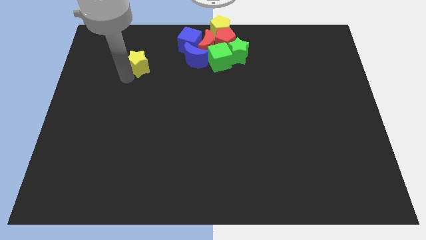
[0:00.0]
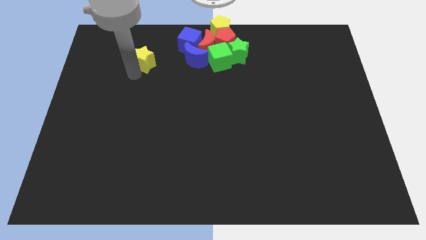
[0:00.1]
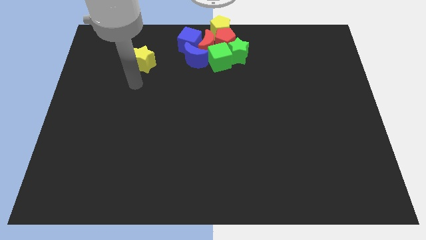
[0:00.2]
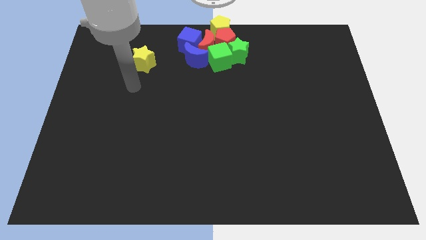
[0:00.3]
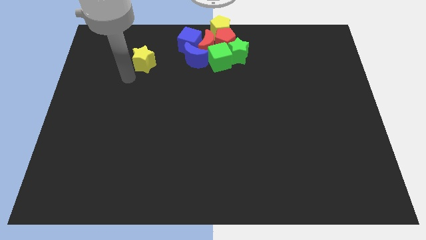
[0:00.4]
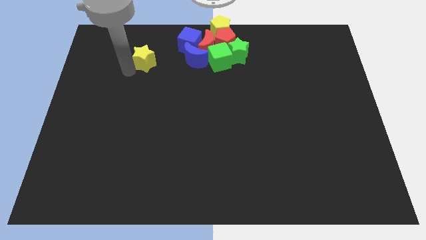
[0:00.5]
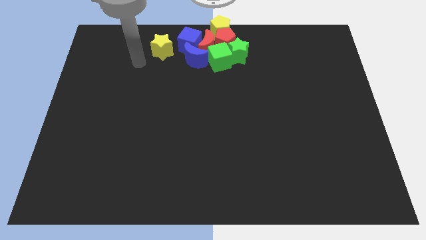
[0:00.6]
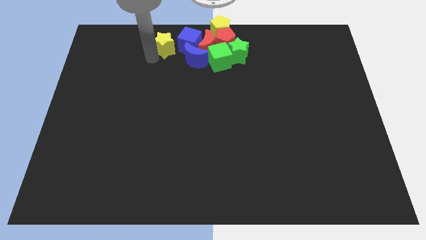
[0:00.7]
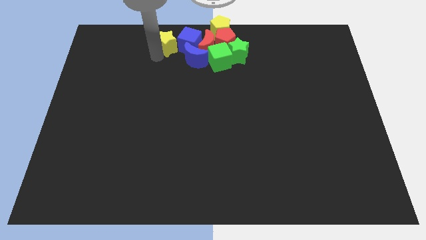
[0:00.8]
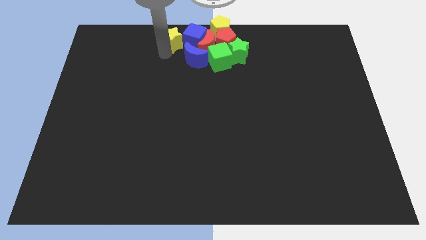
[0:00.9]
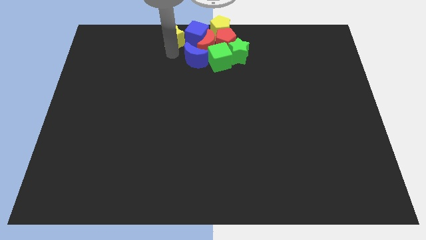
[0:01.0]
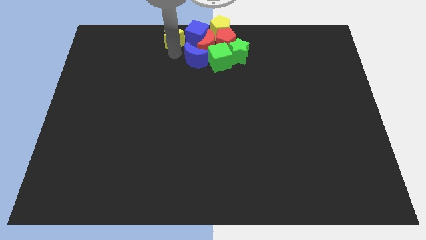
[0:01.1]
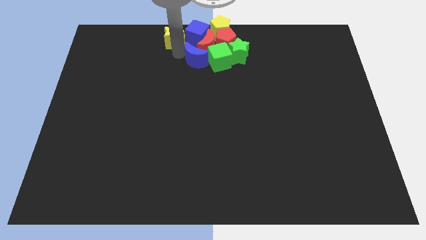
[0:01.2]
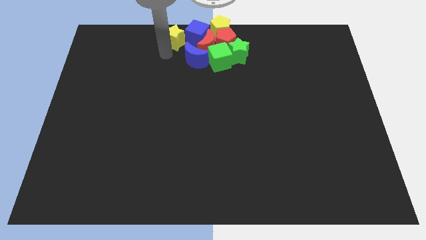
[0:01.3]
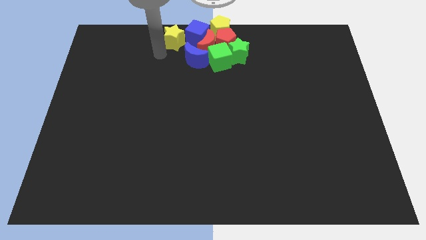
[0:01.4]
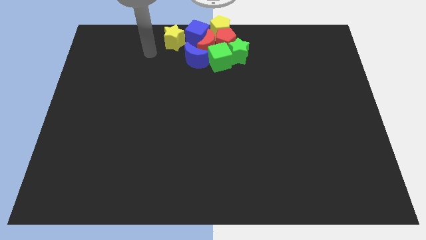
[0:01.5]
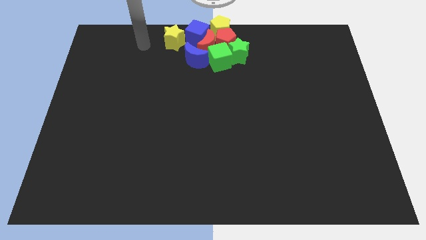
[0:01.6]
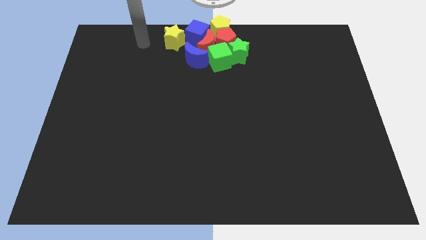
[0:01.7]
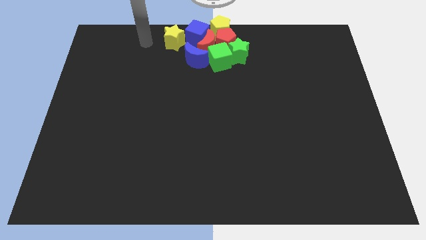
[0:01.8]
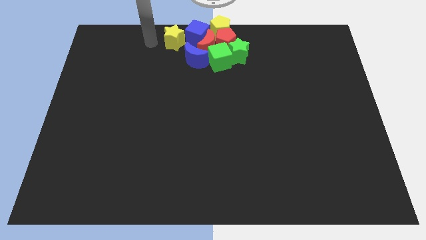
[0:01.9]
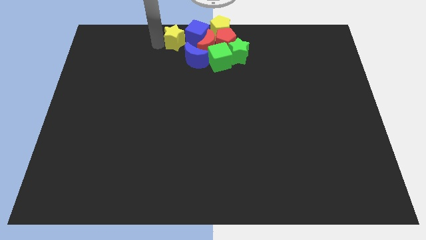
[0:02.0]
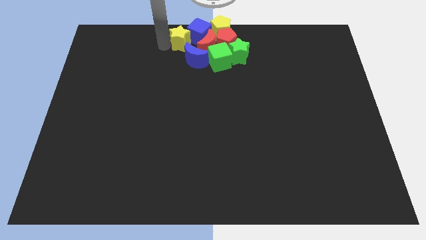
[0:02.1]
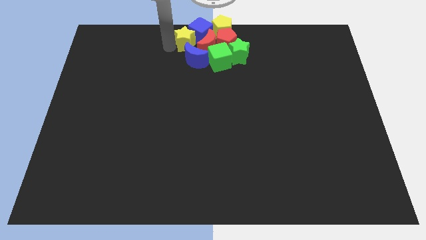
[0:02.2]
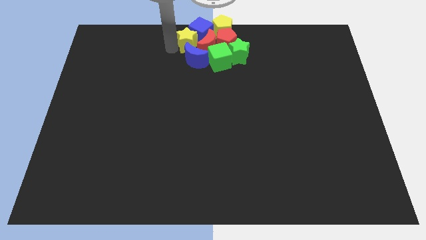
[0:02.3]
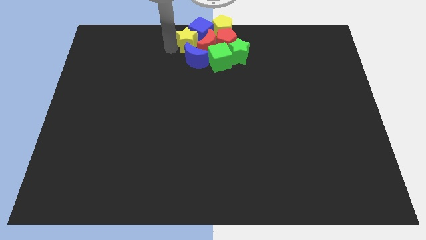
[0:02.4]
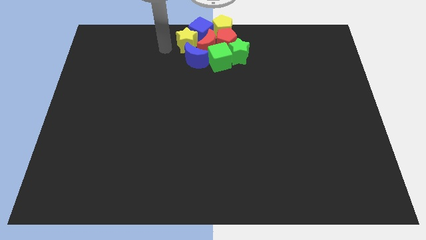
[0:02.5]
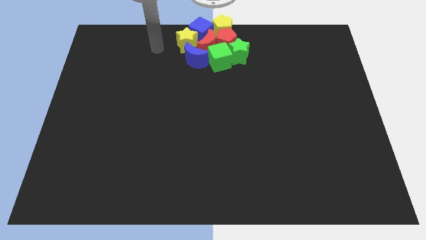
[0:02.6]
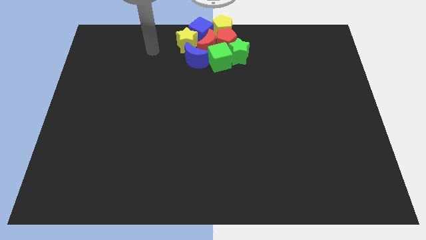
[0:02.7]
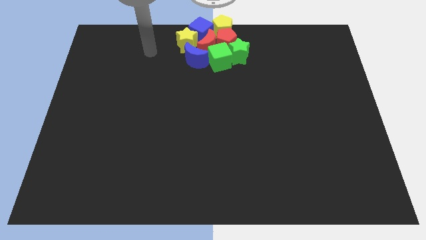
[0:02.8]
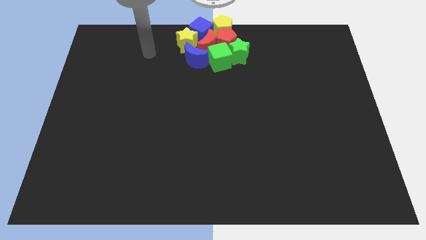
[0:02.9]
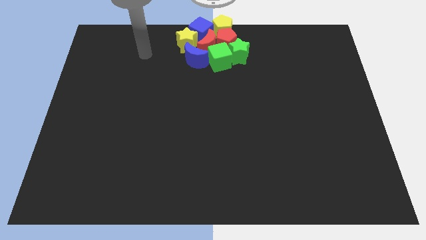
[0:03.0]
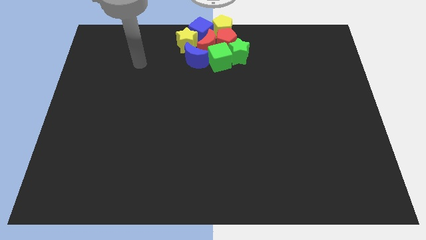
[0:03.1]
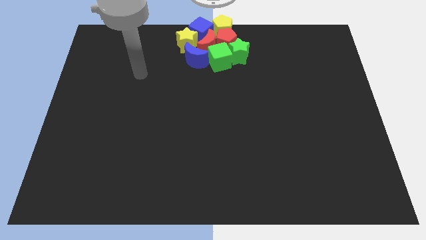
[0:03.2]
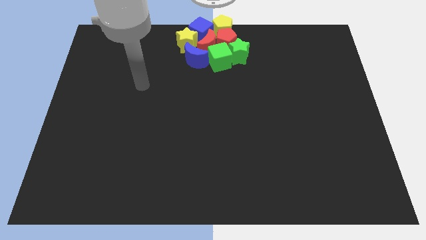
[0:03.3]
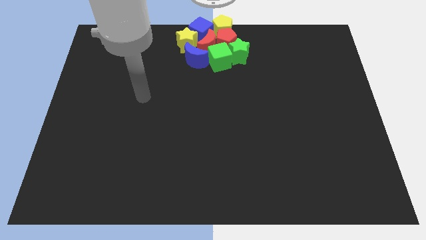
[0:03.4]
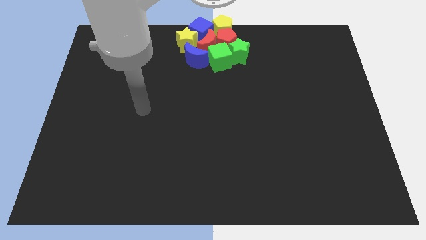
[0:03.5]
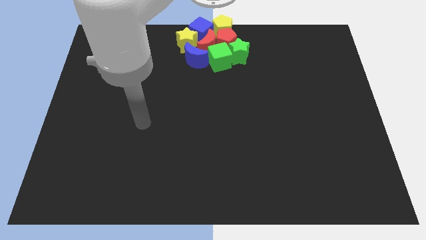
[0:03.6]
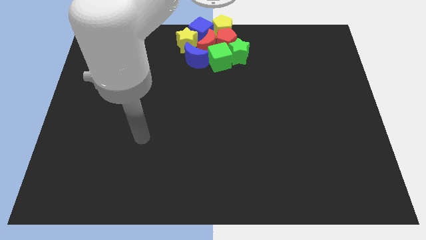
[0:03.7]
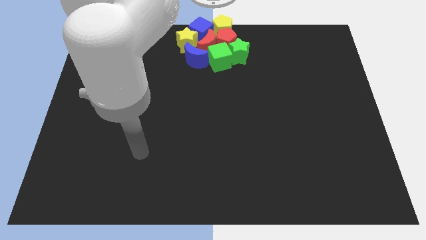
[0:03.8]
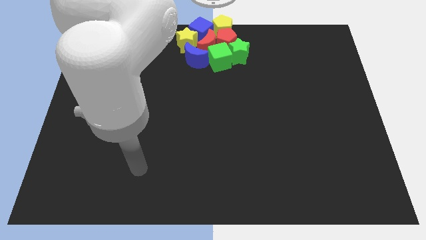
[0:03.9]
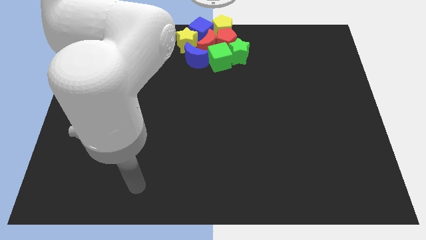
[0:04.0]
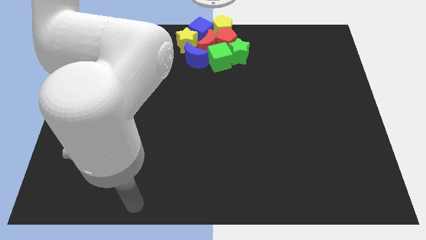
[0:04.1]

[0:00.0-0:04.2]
move the yellow star into the group of blocks

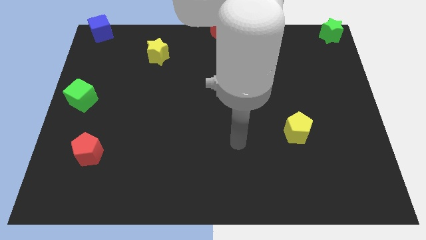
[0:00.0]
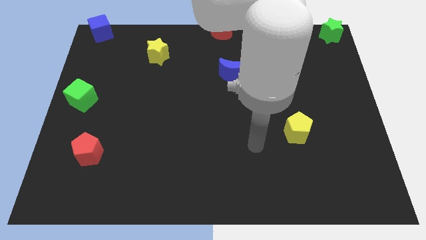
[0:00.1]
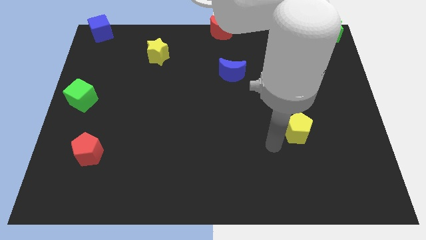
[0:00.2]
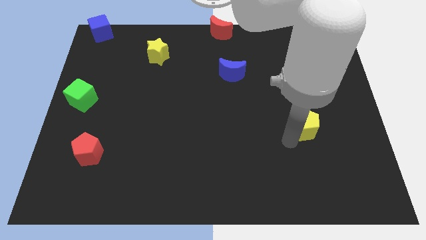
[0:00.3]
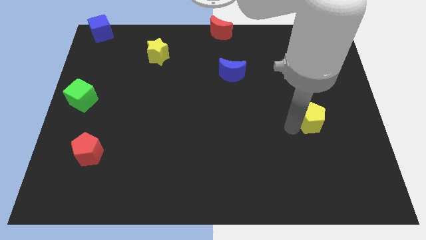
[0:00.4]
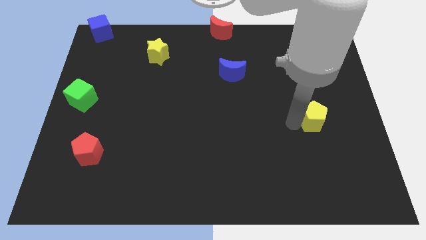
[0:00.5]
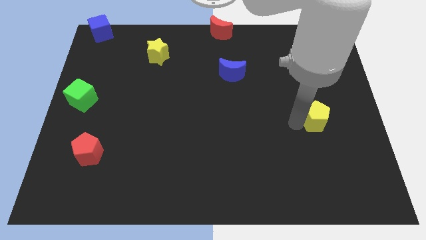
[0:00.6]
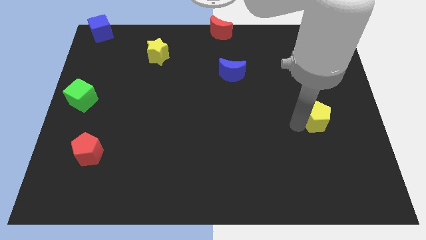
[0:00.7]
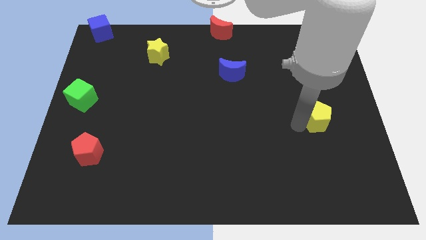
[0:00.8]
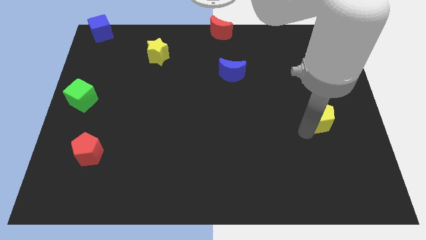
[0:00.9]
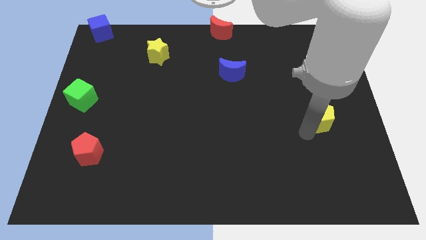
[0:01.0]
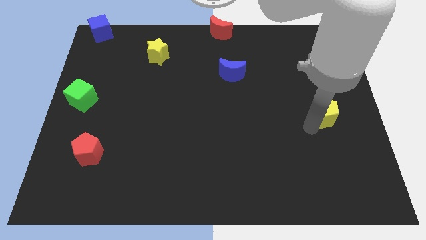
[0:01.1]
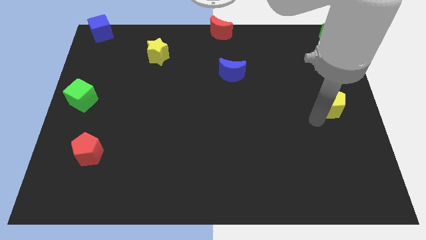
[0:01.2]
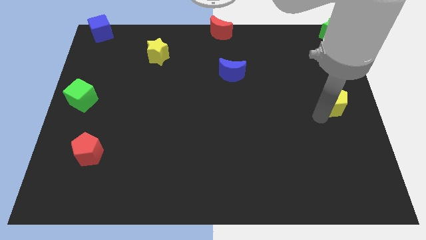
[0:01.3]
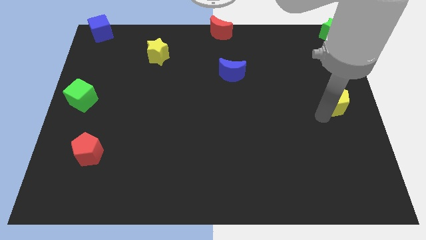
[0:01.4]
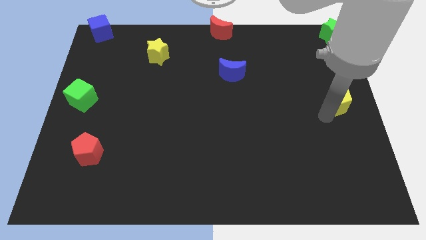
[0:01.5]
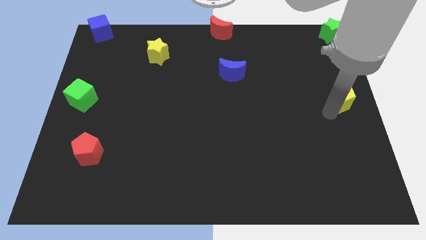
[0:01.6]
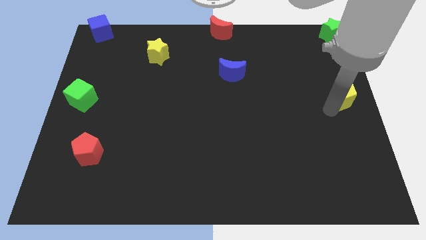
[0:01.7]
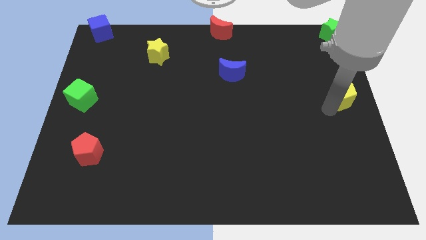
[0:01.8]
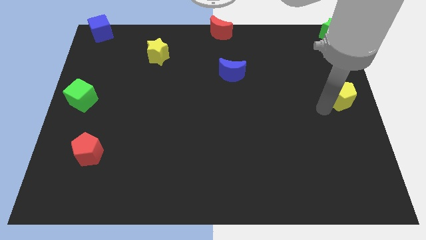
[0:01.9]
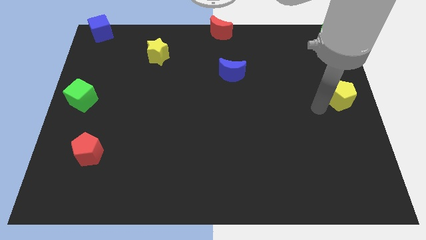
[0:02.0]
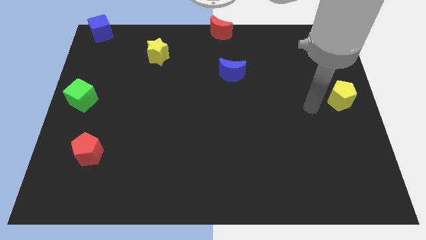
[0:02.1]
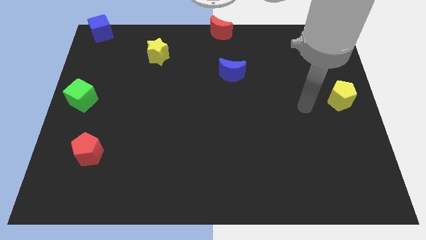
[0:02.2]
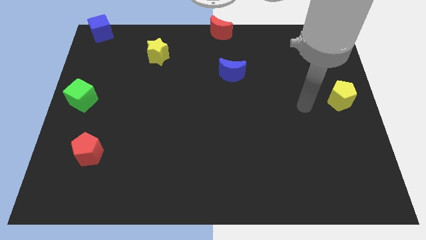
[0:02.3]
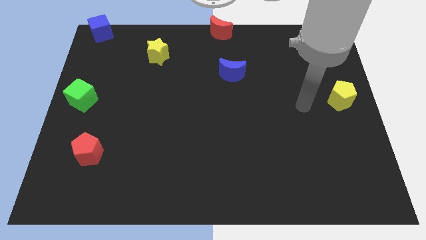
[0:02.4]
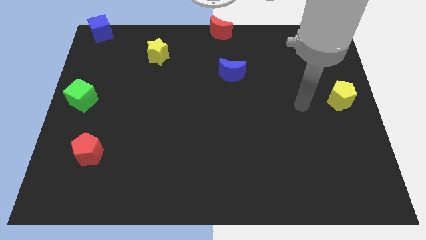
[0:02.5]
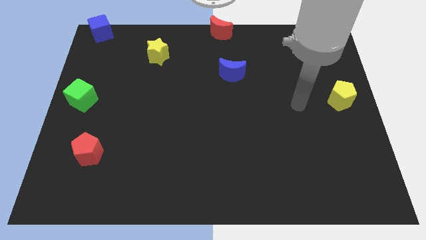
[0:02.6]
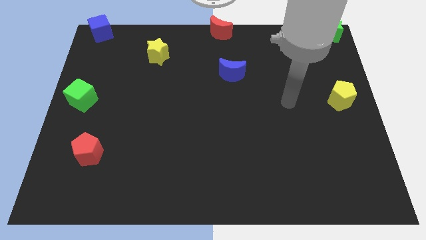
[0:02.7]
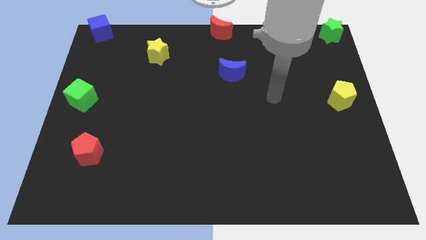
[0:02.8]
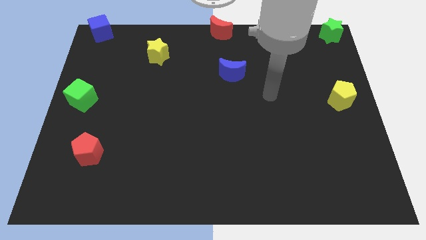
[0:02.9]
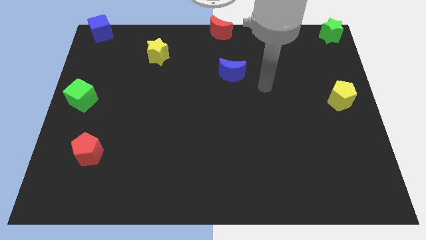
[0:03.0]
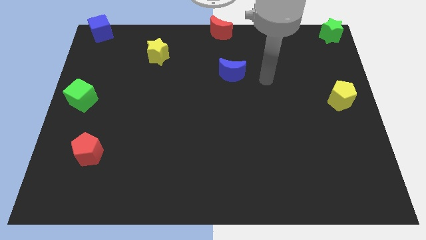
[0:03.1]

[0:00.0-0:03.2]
move the yellow pentagon to the right center of the board

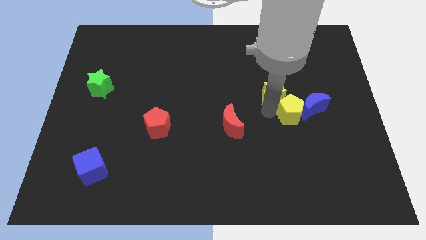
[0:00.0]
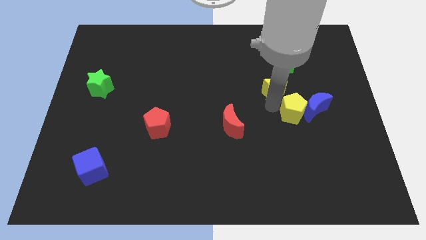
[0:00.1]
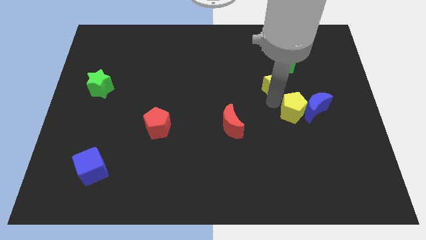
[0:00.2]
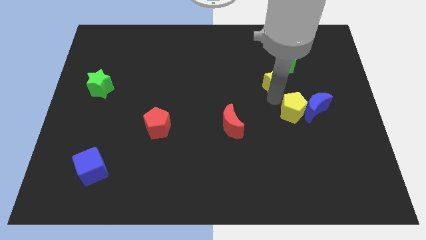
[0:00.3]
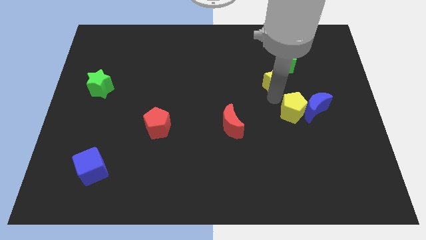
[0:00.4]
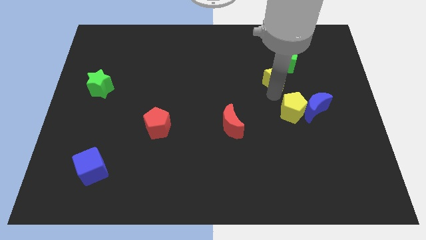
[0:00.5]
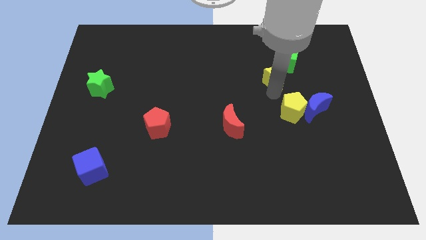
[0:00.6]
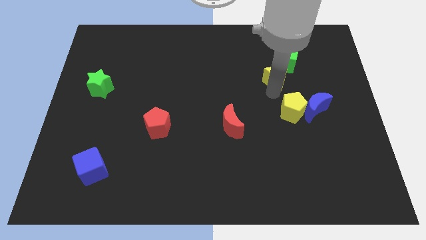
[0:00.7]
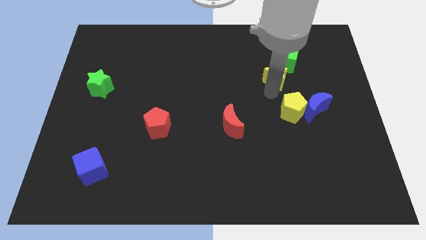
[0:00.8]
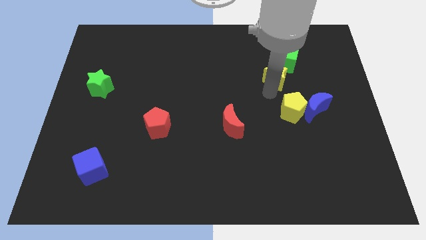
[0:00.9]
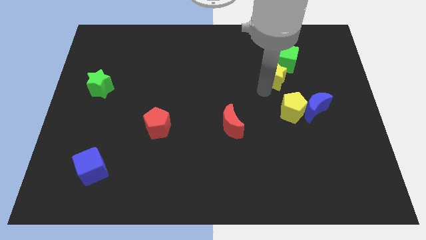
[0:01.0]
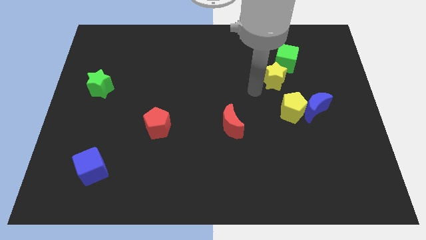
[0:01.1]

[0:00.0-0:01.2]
separate yellow star from the yellow pentagon

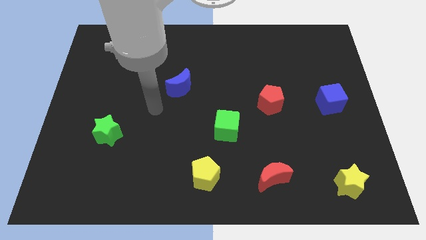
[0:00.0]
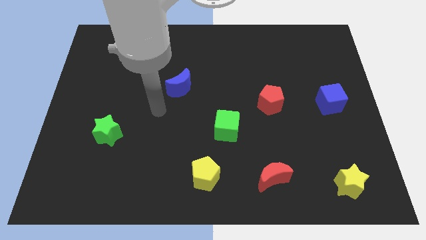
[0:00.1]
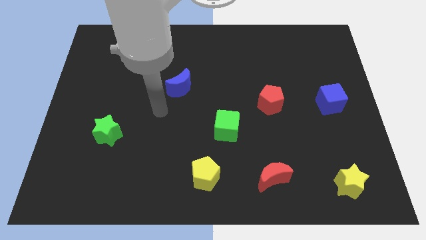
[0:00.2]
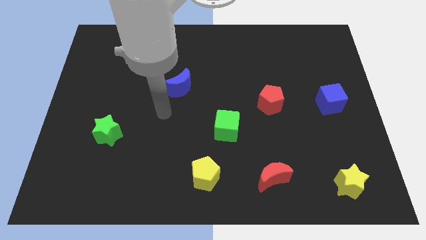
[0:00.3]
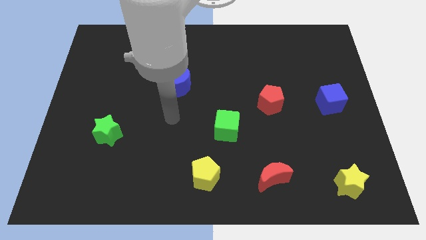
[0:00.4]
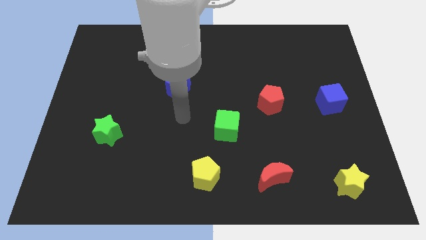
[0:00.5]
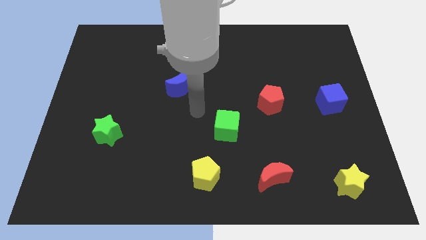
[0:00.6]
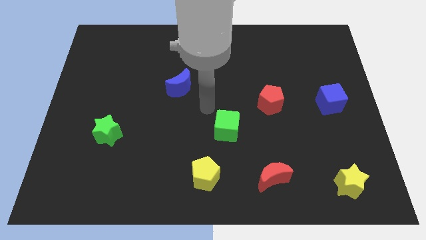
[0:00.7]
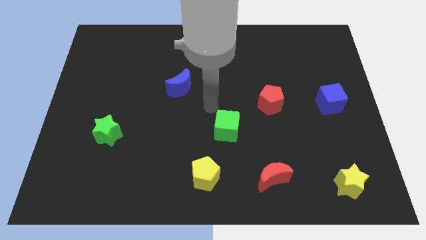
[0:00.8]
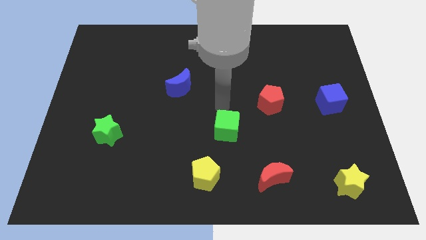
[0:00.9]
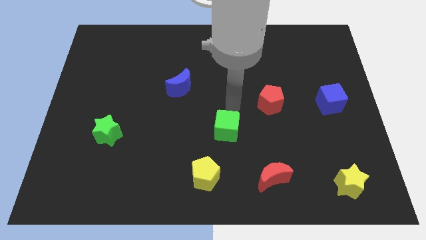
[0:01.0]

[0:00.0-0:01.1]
place your arm in the center of the board
